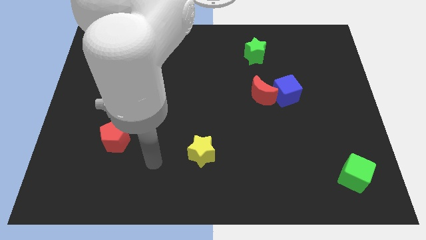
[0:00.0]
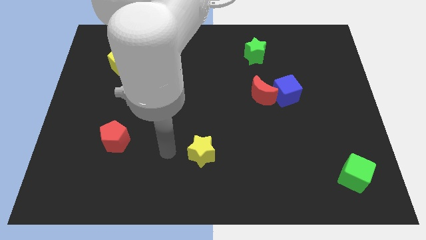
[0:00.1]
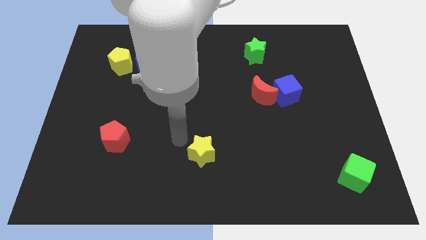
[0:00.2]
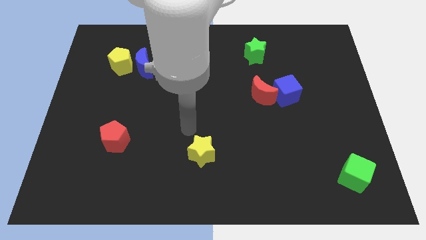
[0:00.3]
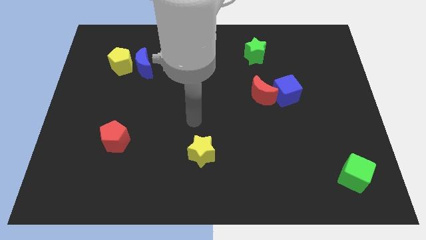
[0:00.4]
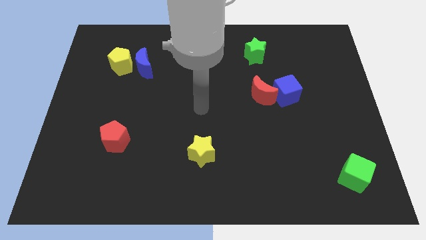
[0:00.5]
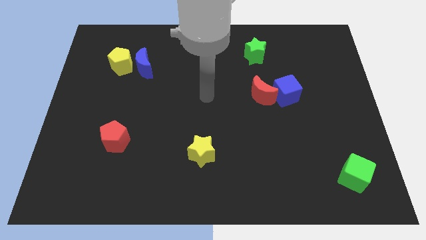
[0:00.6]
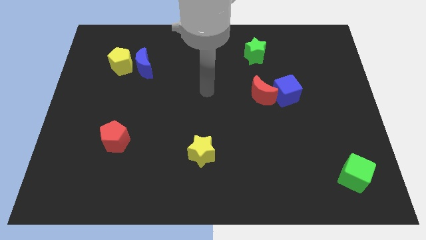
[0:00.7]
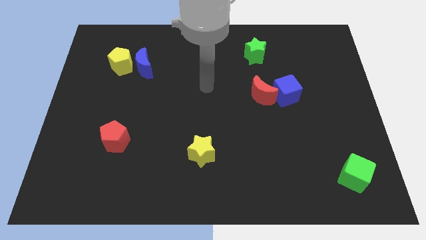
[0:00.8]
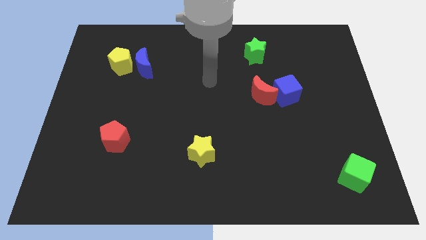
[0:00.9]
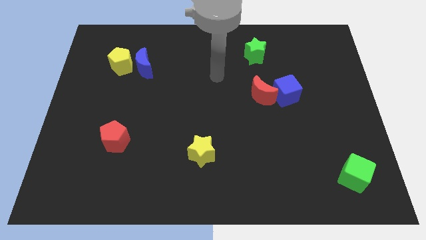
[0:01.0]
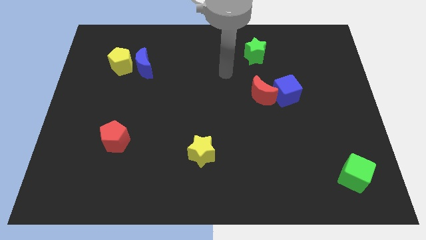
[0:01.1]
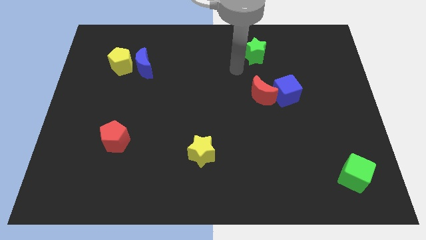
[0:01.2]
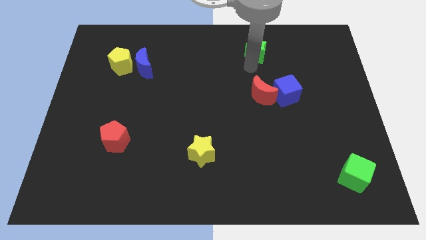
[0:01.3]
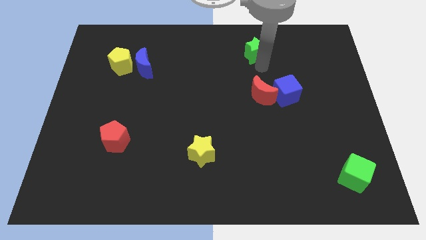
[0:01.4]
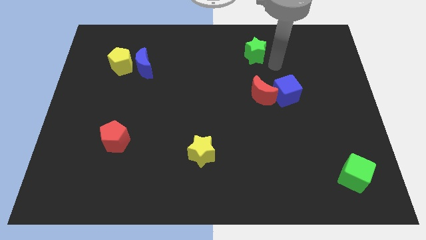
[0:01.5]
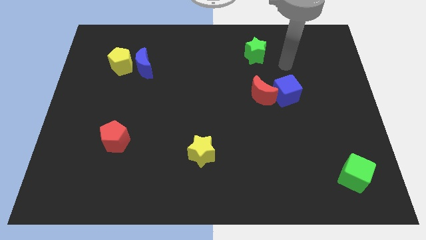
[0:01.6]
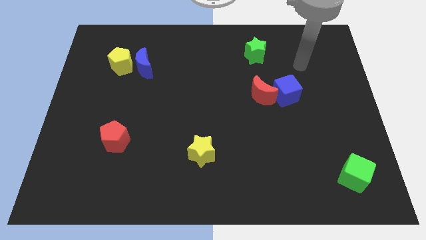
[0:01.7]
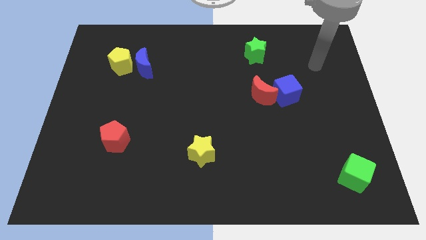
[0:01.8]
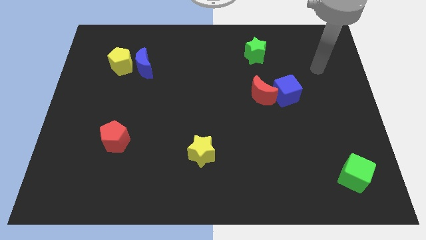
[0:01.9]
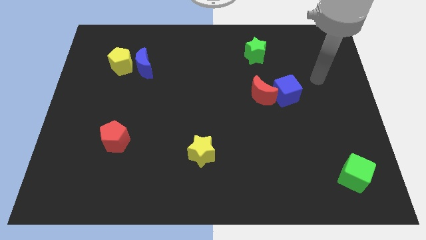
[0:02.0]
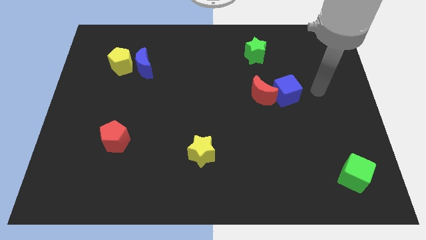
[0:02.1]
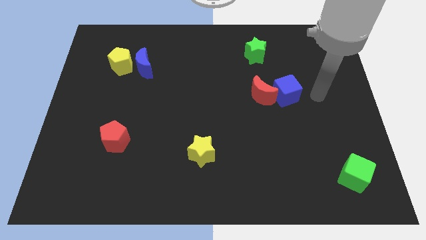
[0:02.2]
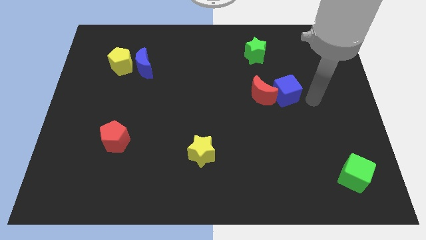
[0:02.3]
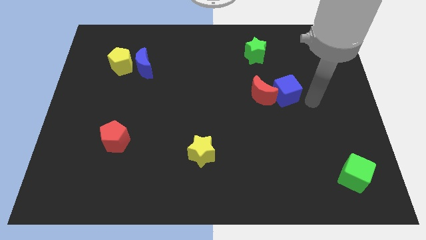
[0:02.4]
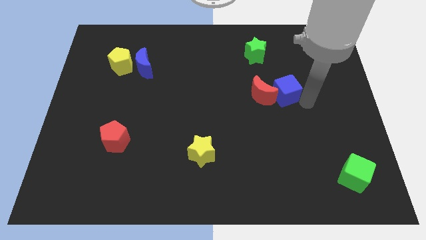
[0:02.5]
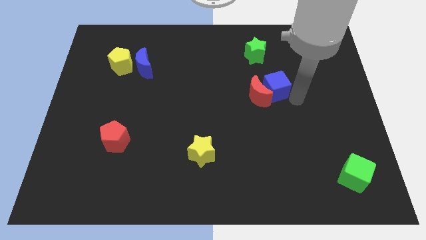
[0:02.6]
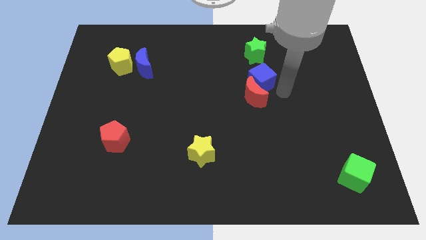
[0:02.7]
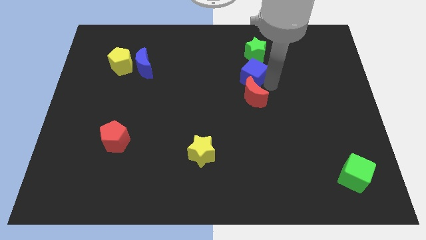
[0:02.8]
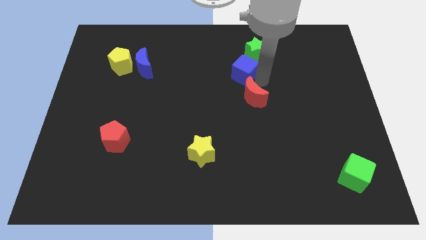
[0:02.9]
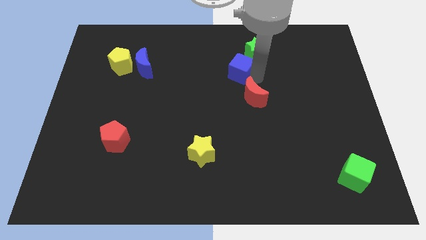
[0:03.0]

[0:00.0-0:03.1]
place the blue cube on top of red crescent

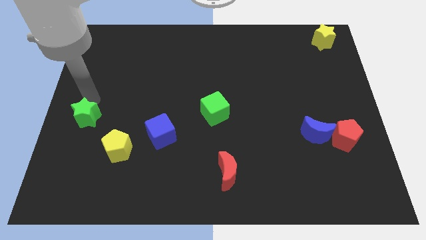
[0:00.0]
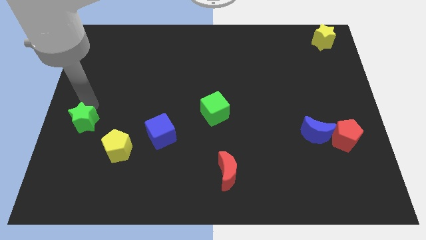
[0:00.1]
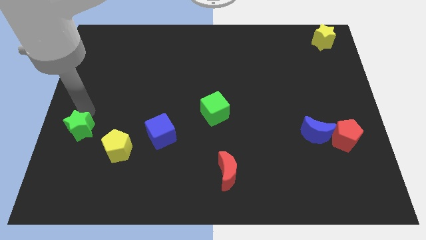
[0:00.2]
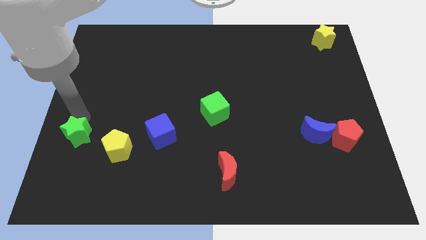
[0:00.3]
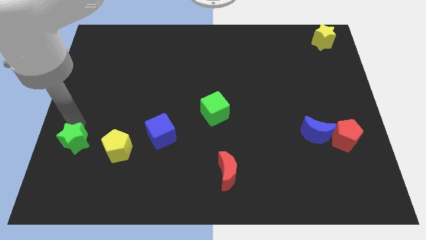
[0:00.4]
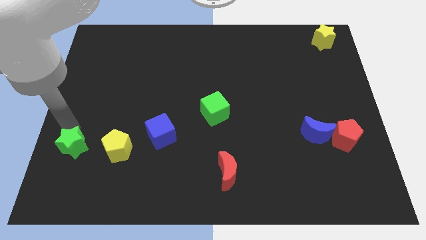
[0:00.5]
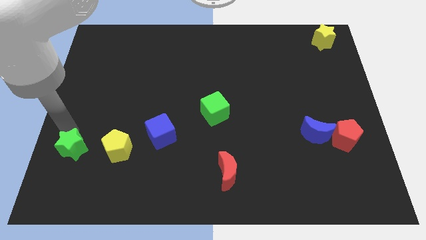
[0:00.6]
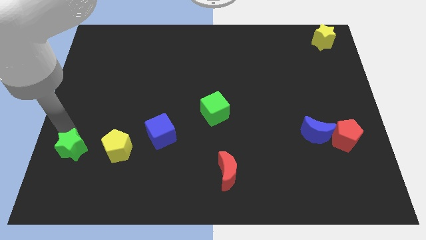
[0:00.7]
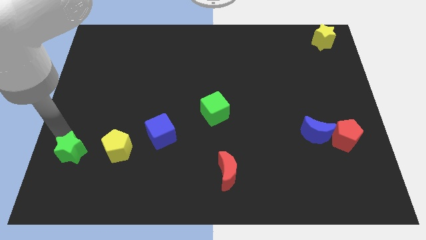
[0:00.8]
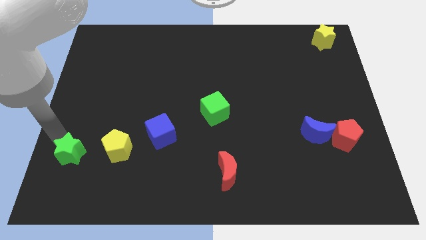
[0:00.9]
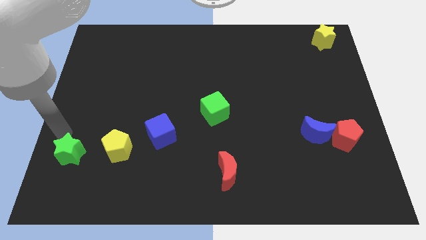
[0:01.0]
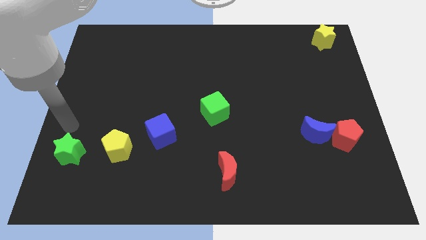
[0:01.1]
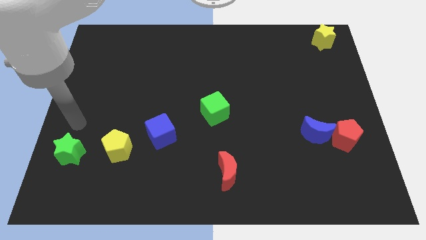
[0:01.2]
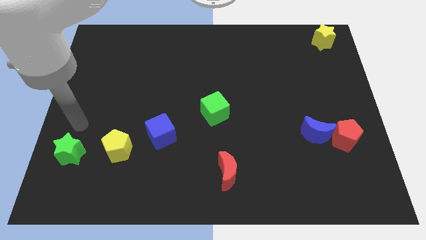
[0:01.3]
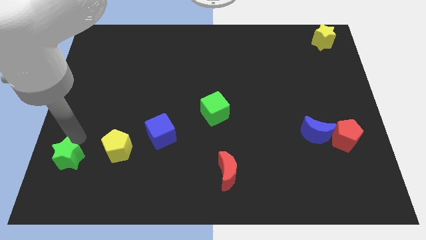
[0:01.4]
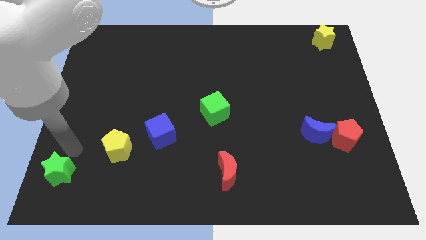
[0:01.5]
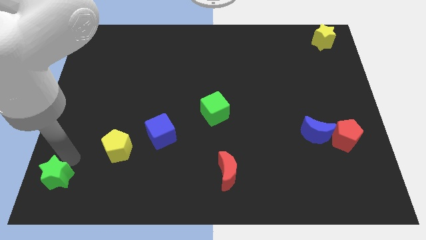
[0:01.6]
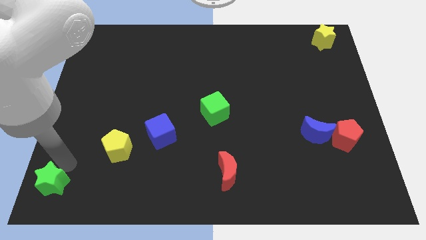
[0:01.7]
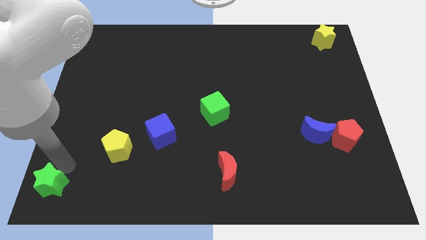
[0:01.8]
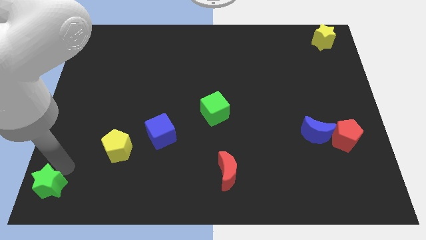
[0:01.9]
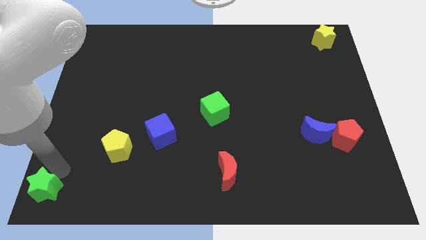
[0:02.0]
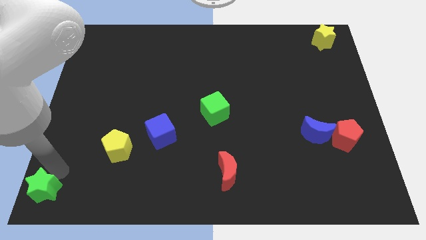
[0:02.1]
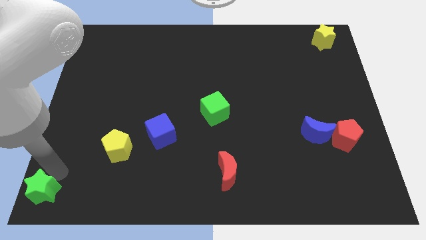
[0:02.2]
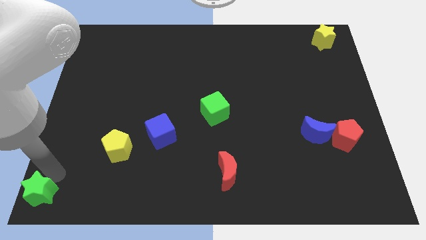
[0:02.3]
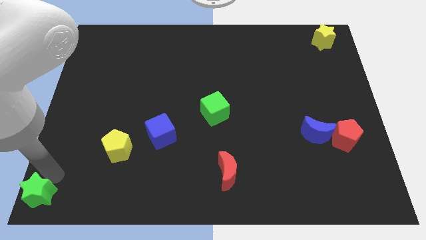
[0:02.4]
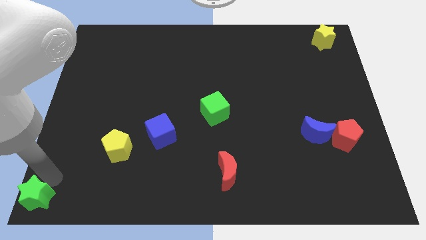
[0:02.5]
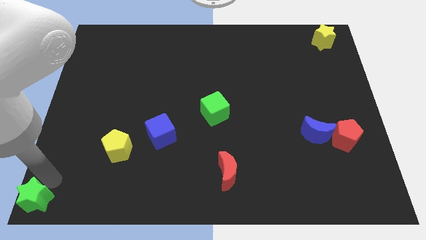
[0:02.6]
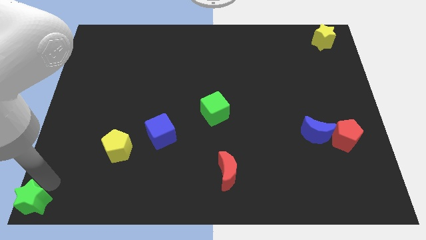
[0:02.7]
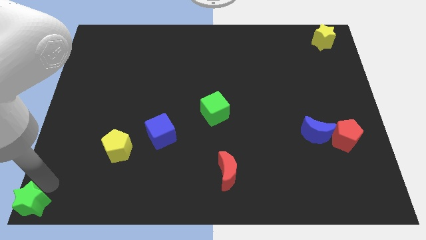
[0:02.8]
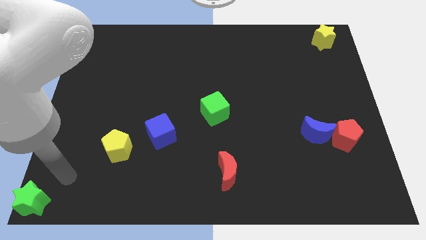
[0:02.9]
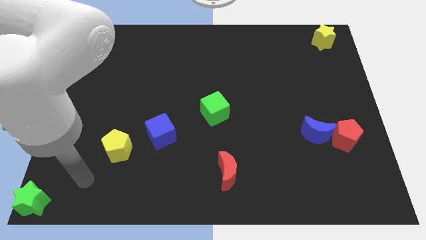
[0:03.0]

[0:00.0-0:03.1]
slide green star to the bottom left

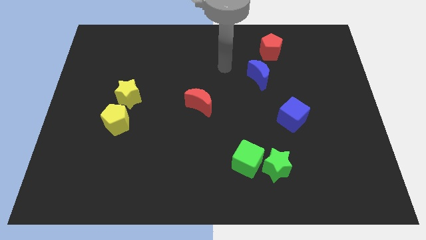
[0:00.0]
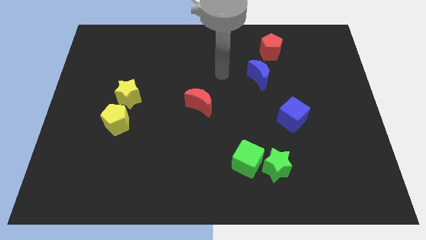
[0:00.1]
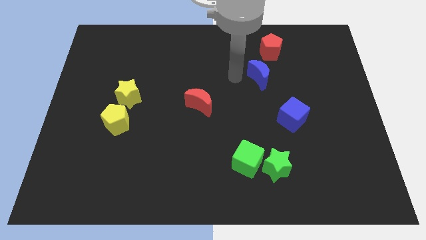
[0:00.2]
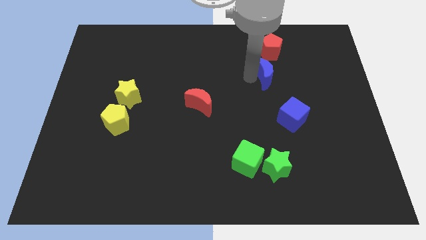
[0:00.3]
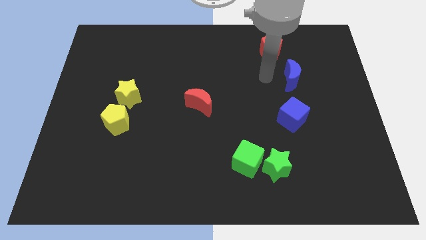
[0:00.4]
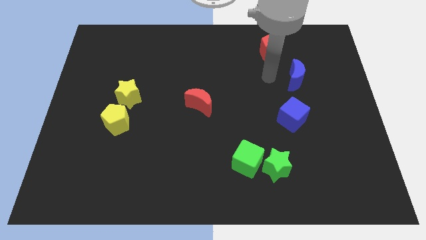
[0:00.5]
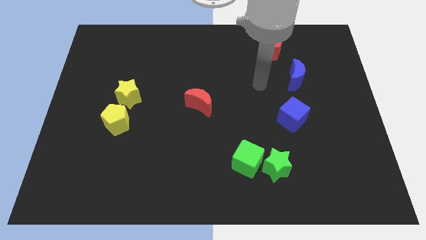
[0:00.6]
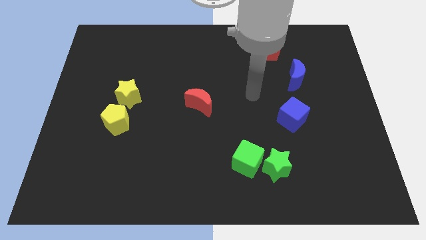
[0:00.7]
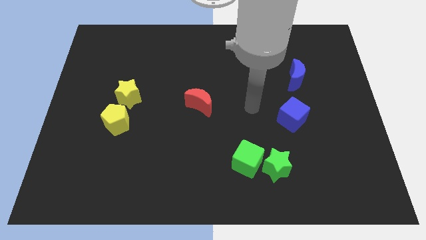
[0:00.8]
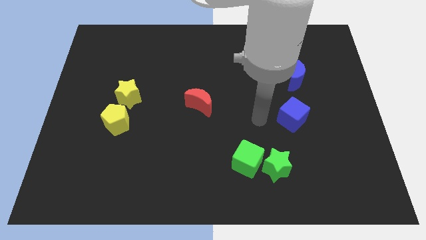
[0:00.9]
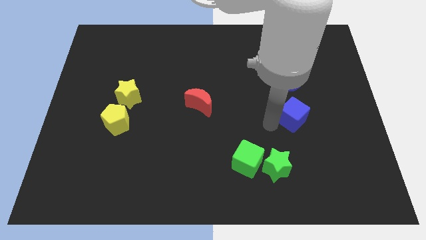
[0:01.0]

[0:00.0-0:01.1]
push the blue crescent to the right of the board

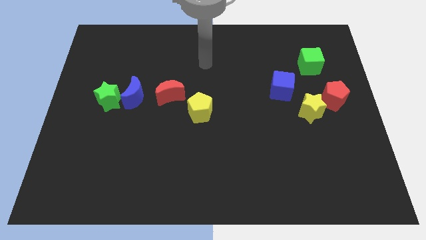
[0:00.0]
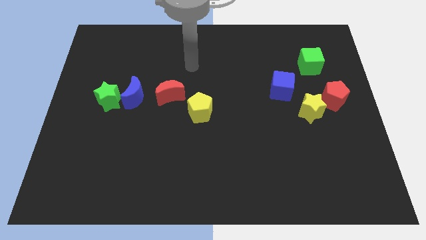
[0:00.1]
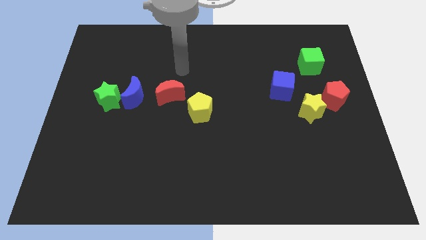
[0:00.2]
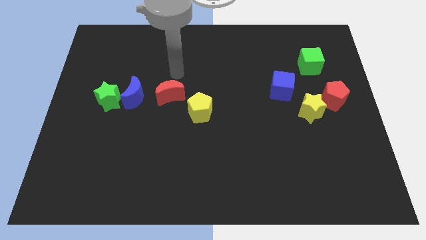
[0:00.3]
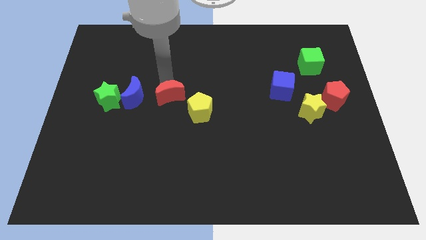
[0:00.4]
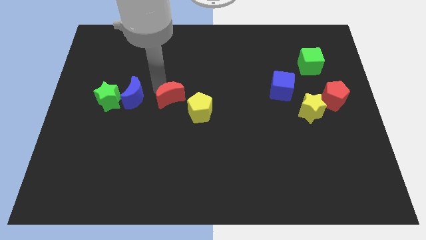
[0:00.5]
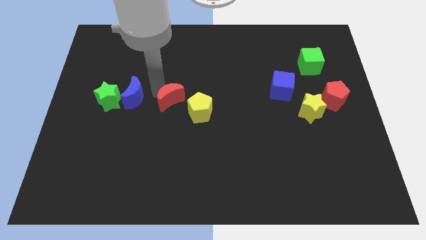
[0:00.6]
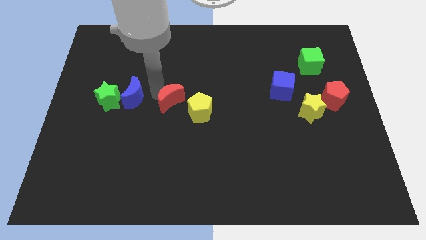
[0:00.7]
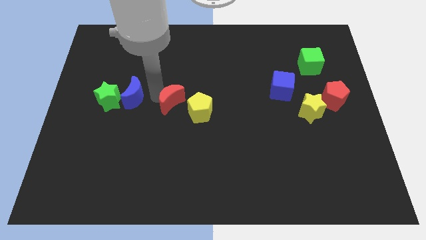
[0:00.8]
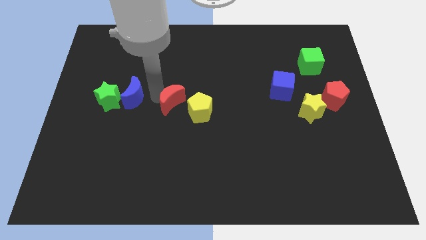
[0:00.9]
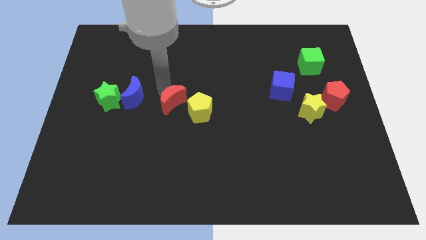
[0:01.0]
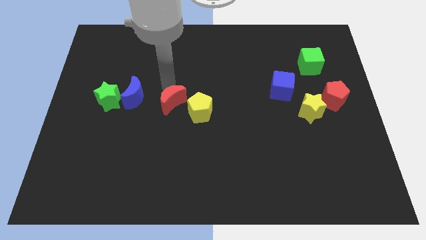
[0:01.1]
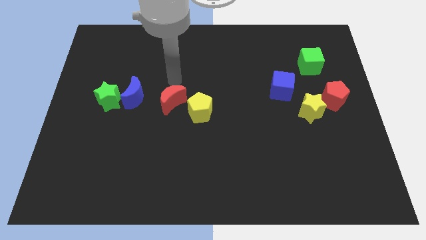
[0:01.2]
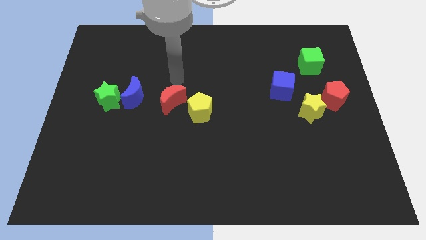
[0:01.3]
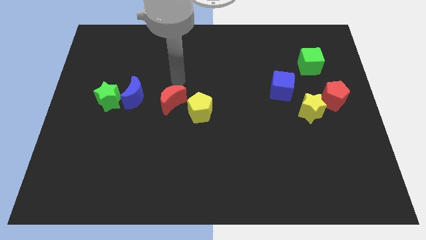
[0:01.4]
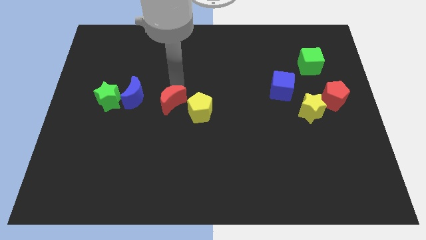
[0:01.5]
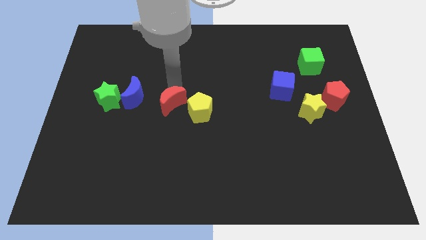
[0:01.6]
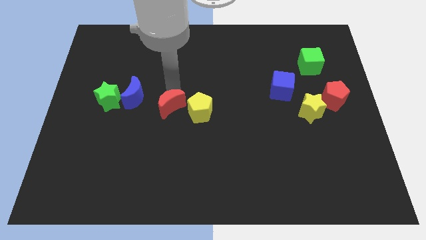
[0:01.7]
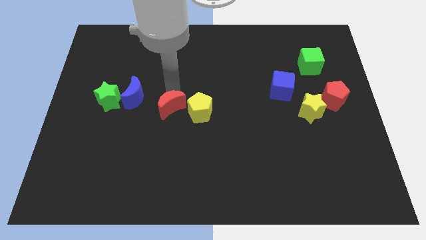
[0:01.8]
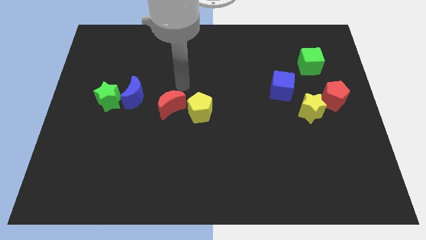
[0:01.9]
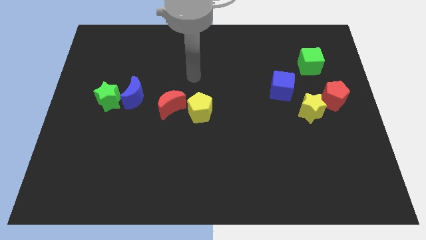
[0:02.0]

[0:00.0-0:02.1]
slide red moon into yellow pentagon
